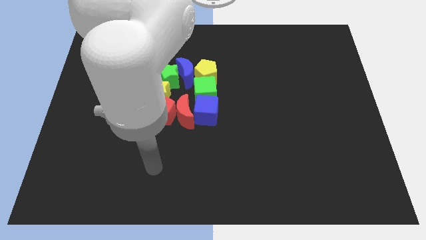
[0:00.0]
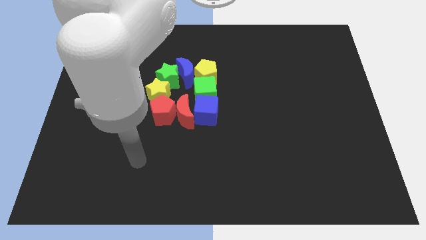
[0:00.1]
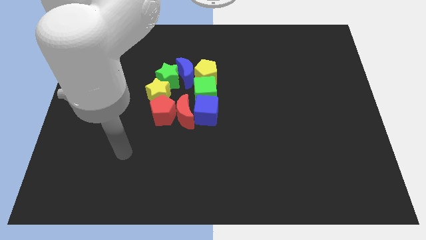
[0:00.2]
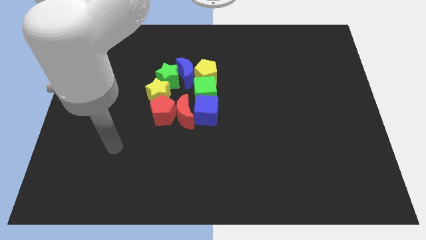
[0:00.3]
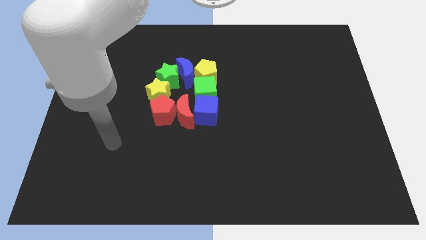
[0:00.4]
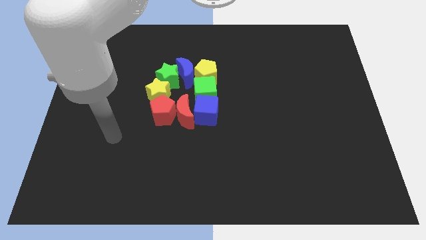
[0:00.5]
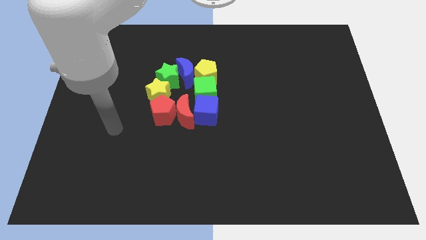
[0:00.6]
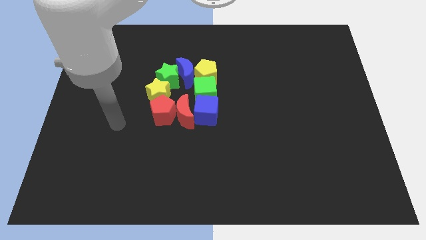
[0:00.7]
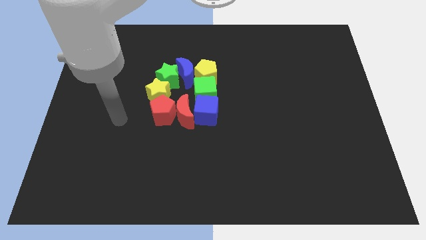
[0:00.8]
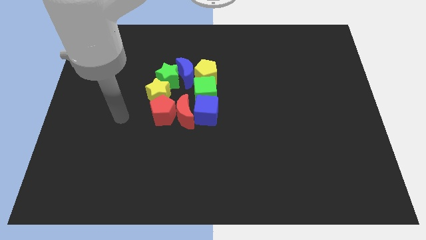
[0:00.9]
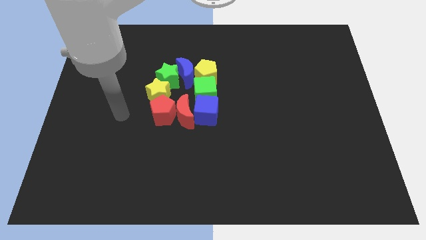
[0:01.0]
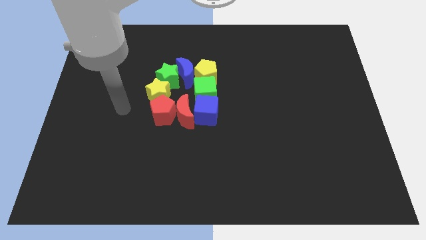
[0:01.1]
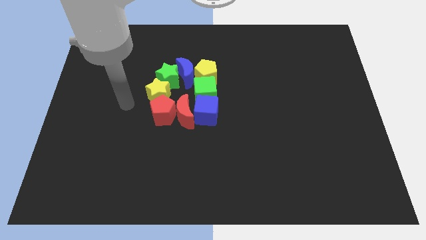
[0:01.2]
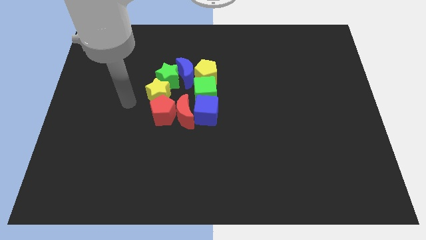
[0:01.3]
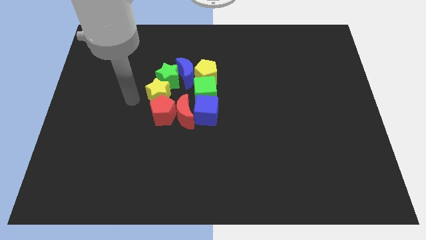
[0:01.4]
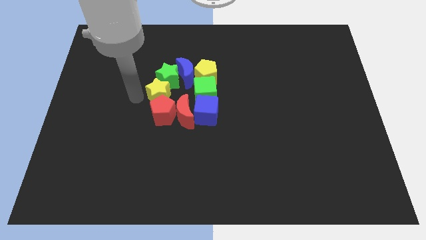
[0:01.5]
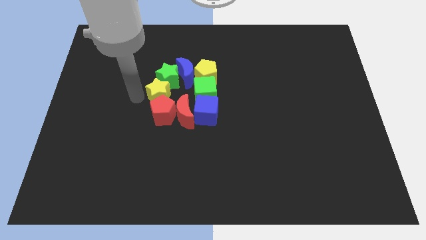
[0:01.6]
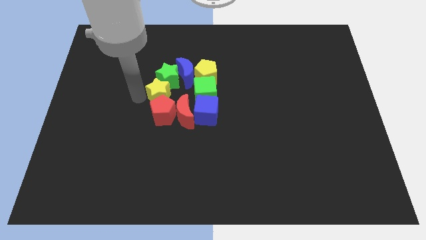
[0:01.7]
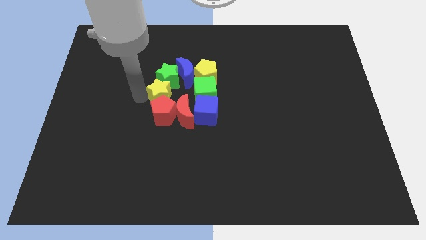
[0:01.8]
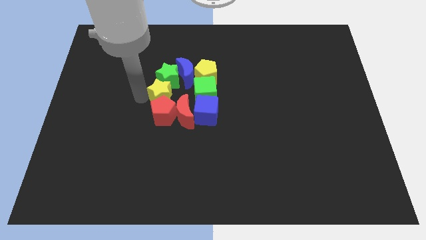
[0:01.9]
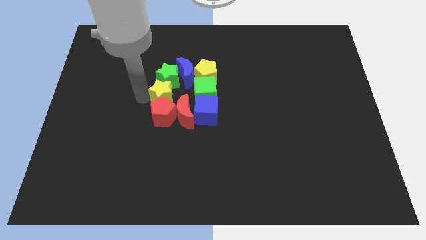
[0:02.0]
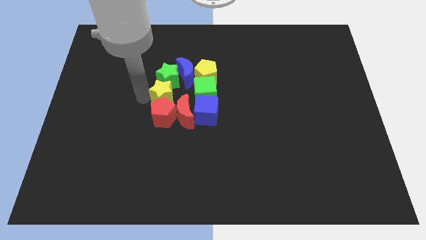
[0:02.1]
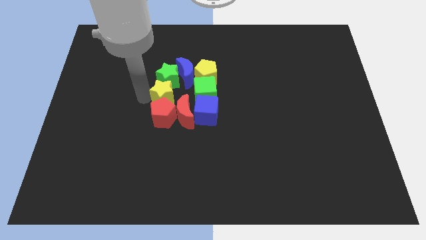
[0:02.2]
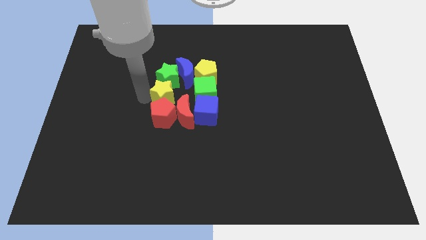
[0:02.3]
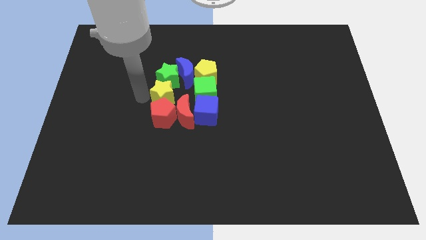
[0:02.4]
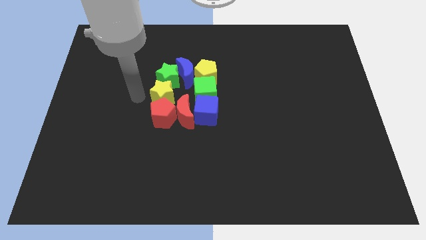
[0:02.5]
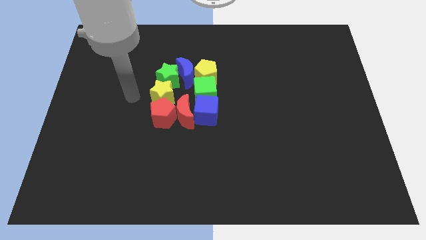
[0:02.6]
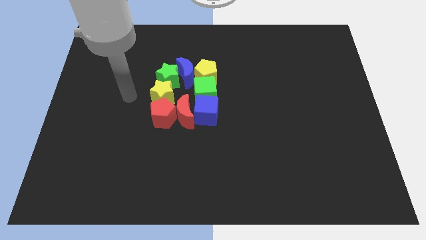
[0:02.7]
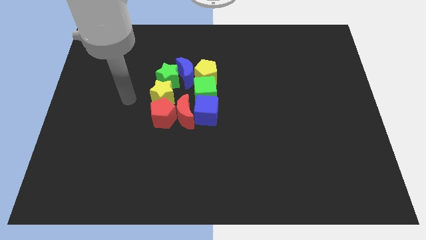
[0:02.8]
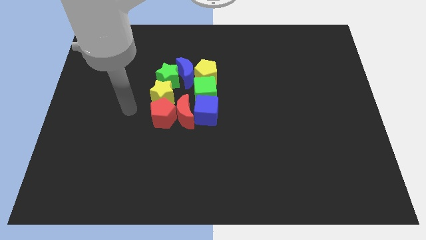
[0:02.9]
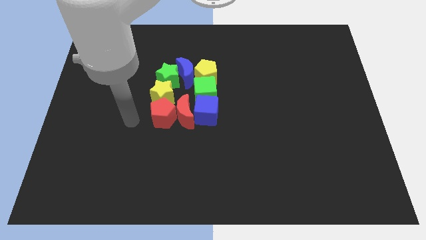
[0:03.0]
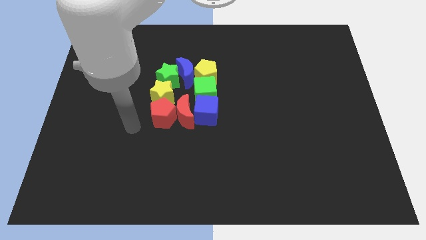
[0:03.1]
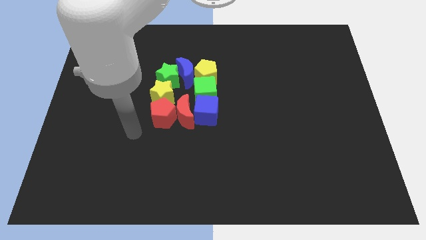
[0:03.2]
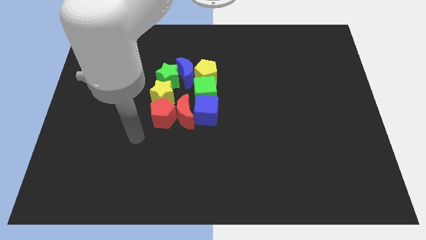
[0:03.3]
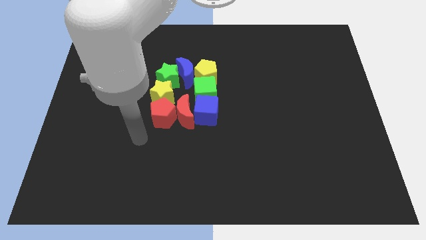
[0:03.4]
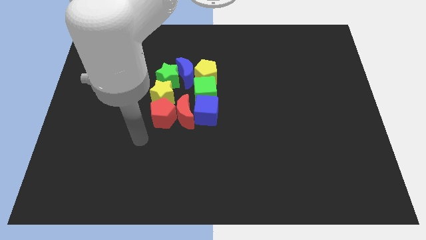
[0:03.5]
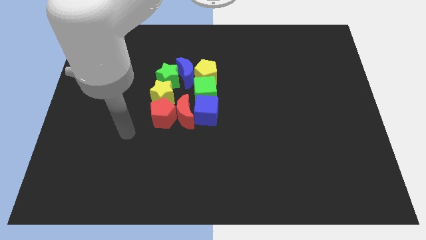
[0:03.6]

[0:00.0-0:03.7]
adjust the yellow star at the center of the green star and red pentagon

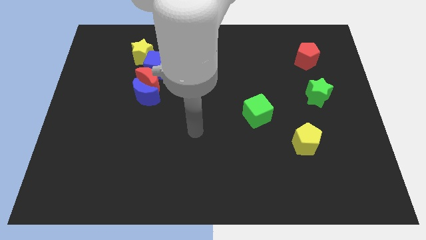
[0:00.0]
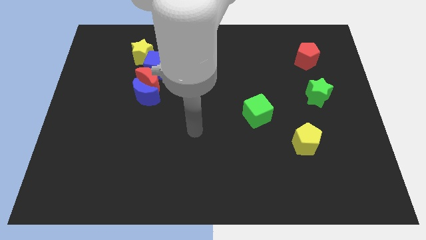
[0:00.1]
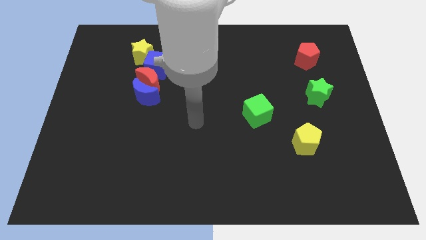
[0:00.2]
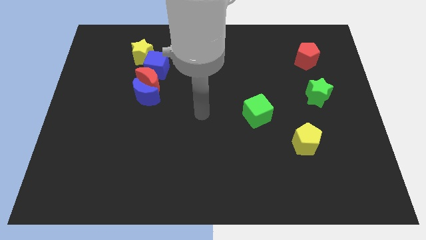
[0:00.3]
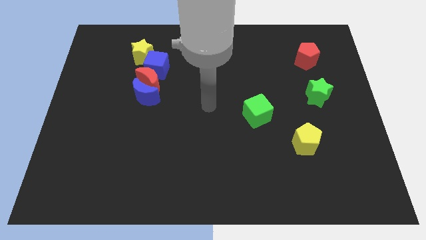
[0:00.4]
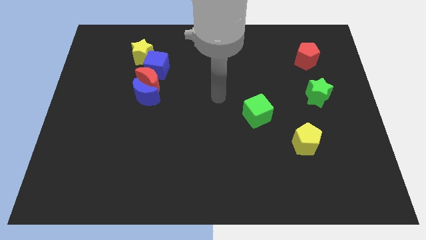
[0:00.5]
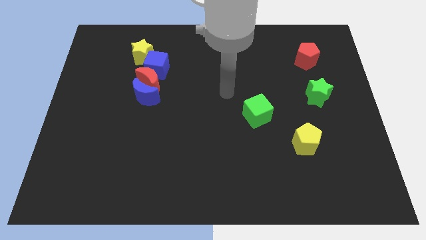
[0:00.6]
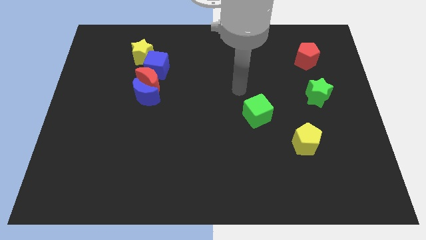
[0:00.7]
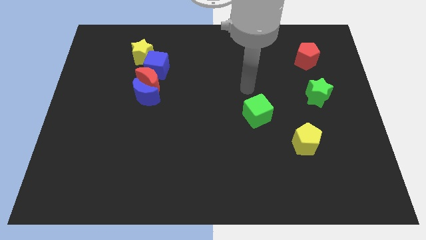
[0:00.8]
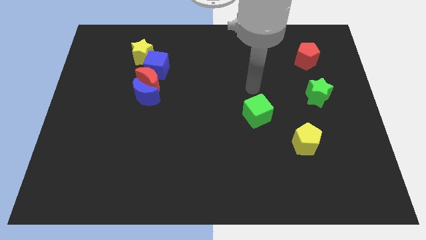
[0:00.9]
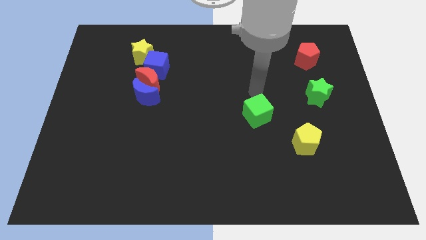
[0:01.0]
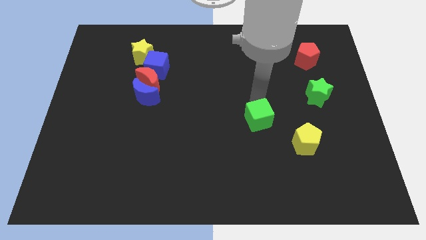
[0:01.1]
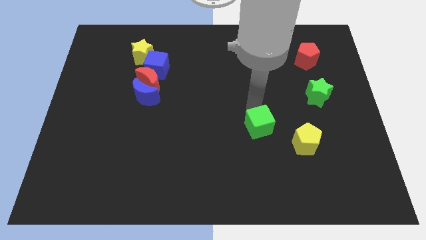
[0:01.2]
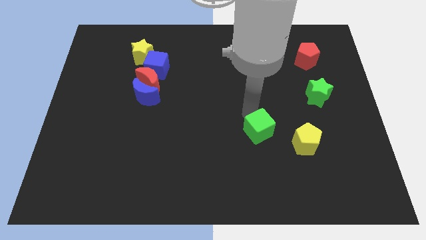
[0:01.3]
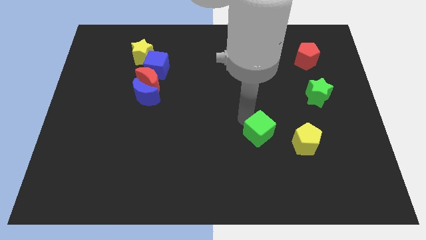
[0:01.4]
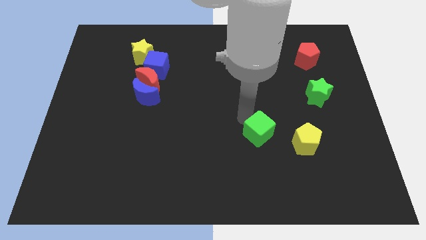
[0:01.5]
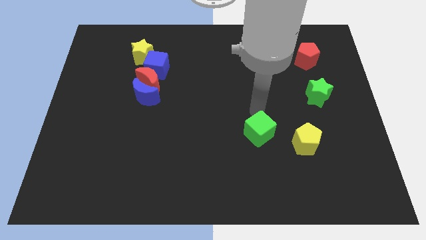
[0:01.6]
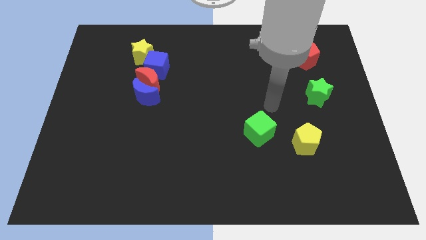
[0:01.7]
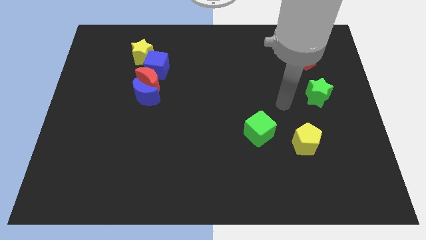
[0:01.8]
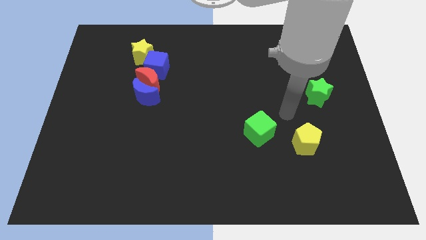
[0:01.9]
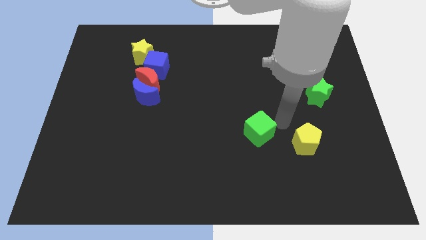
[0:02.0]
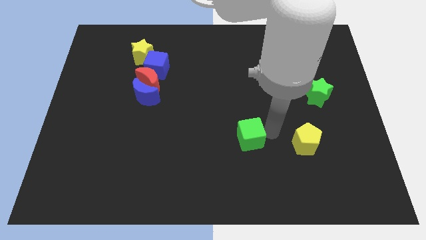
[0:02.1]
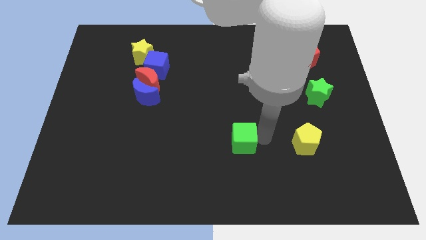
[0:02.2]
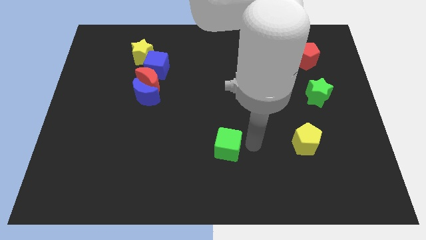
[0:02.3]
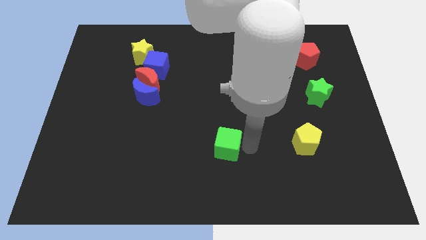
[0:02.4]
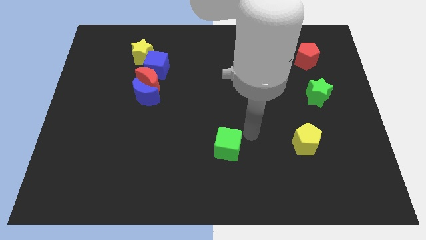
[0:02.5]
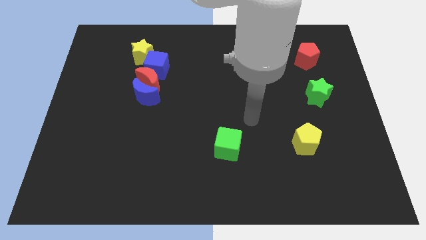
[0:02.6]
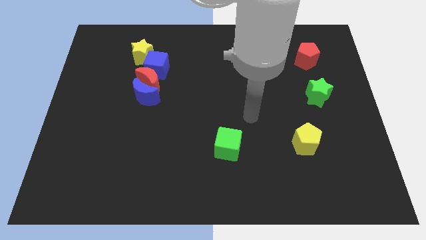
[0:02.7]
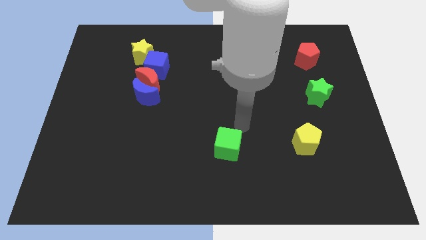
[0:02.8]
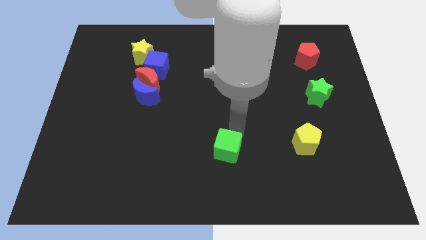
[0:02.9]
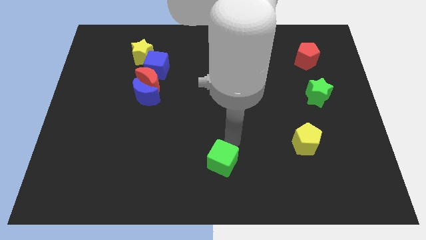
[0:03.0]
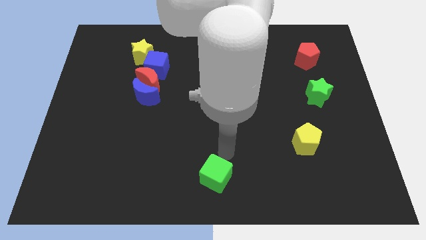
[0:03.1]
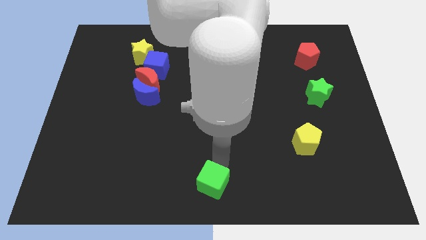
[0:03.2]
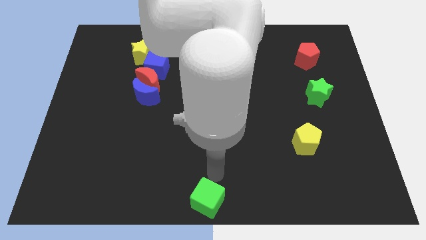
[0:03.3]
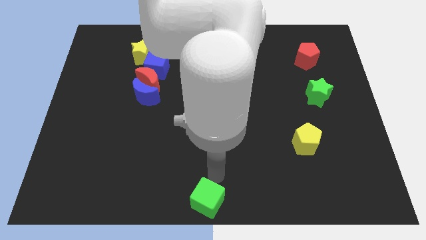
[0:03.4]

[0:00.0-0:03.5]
move the green cube to the bottom center of the board

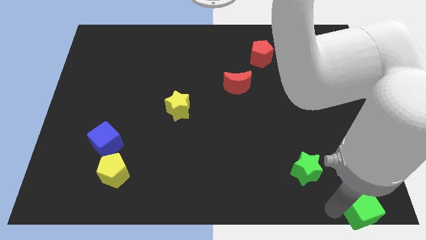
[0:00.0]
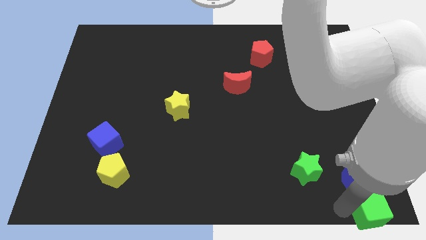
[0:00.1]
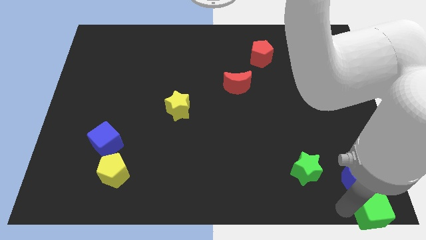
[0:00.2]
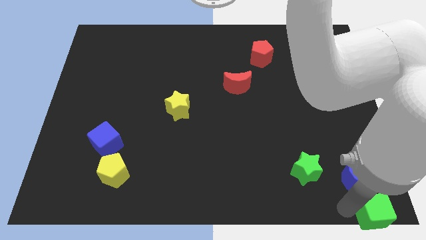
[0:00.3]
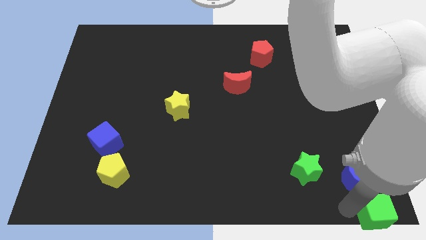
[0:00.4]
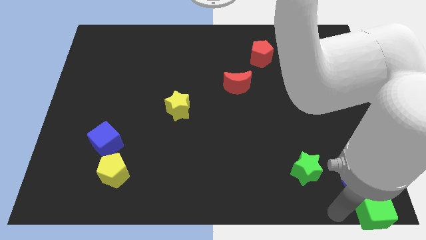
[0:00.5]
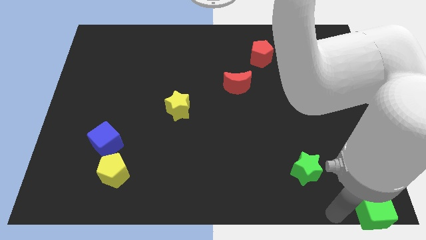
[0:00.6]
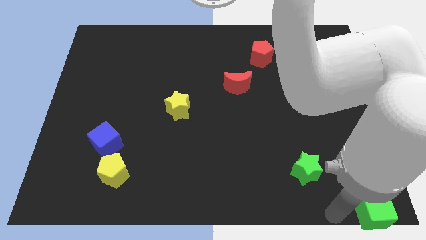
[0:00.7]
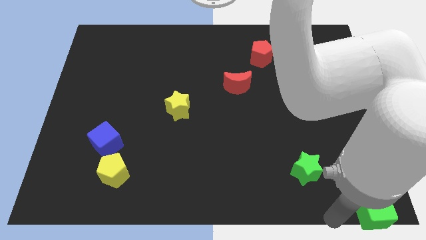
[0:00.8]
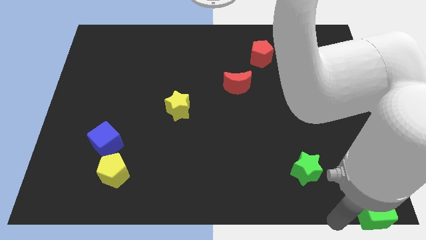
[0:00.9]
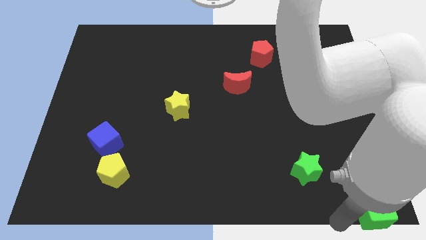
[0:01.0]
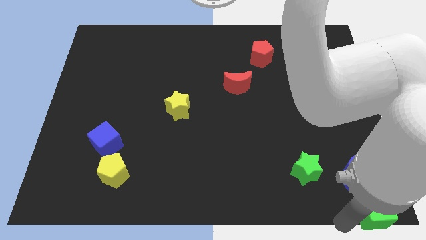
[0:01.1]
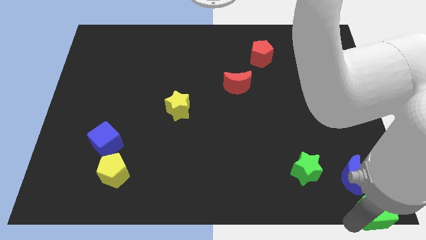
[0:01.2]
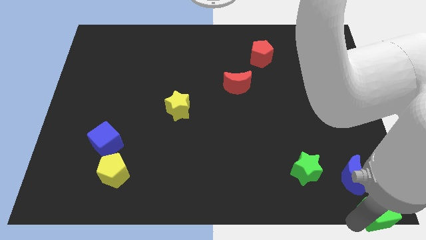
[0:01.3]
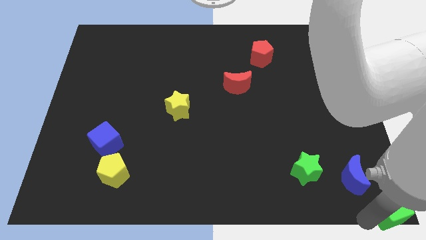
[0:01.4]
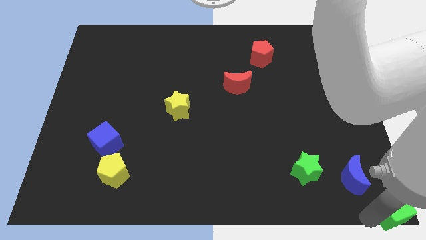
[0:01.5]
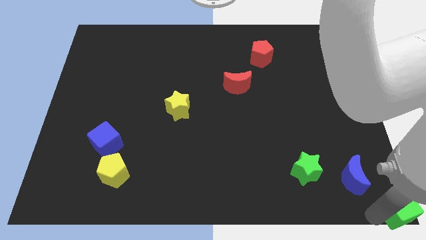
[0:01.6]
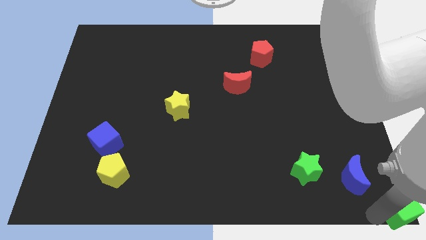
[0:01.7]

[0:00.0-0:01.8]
move the green cube to the bottom right corner of the board
